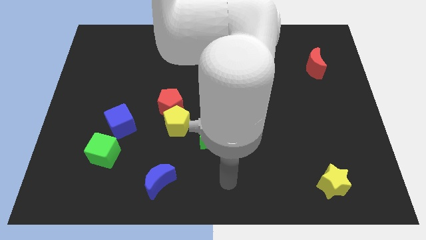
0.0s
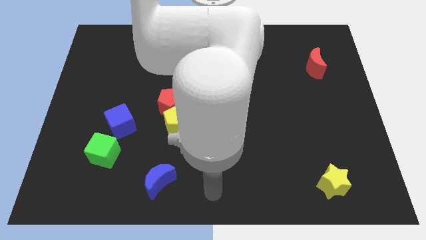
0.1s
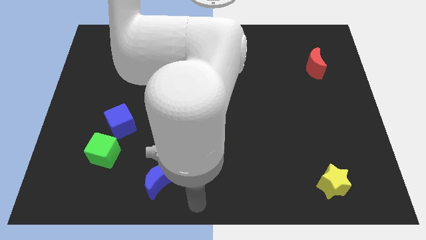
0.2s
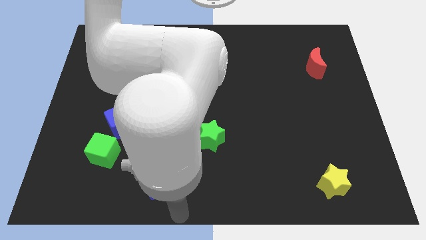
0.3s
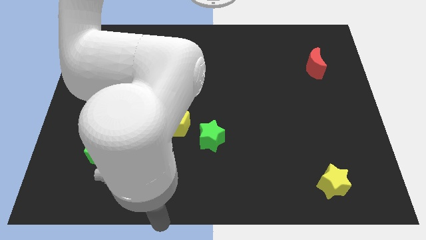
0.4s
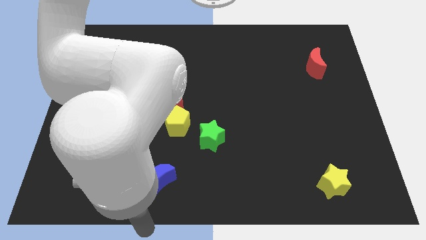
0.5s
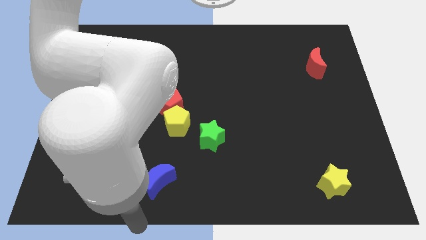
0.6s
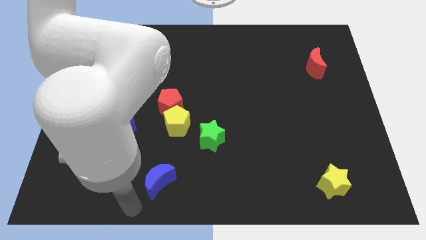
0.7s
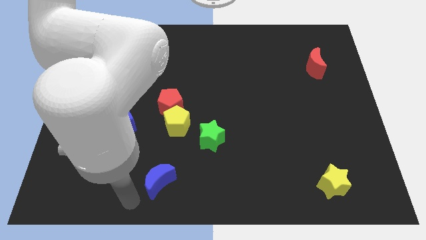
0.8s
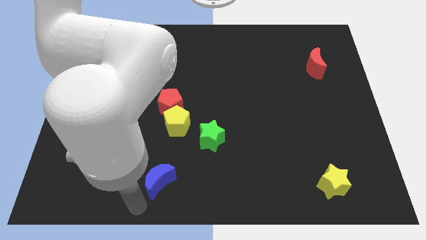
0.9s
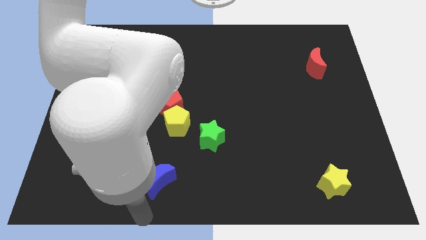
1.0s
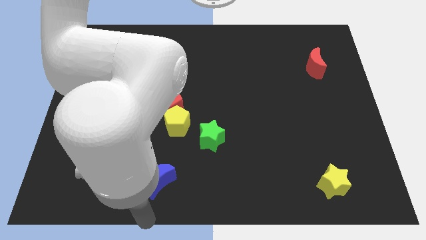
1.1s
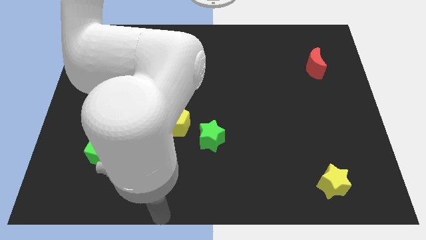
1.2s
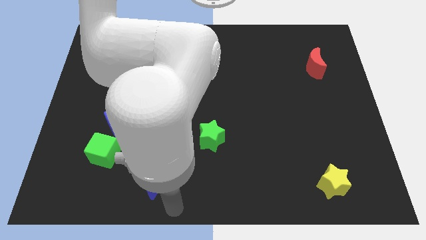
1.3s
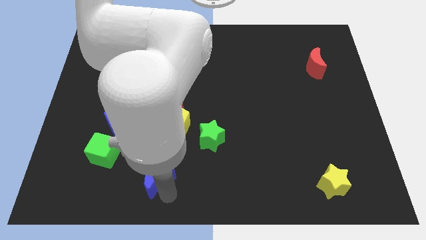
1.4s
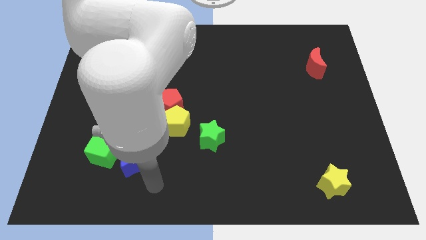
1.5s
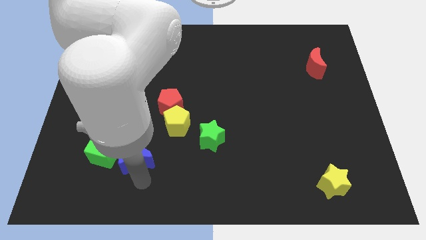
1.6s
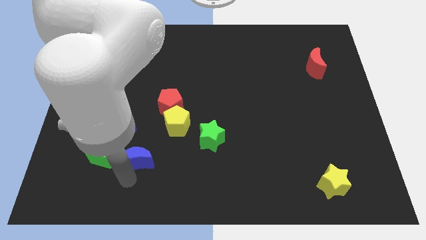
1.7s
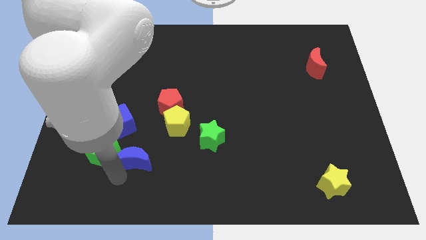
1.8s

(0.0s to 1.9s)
push the blue crescent into the green cube

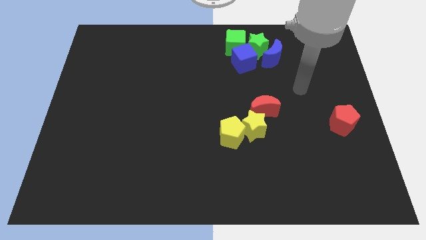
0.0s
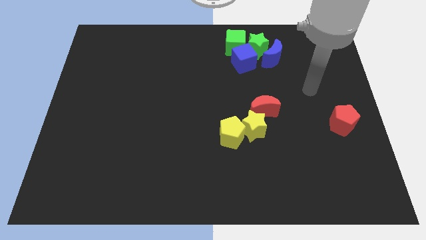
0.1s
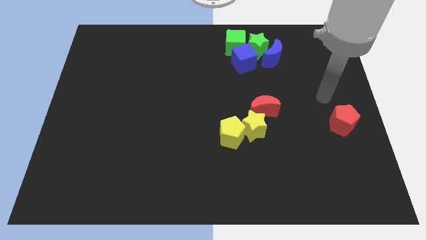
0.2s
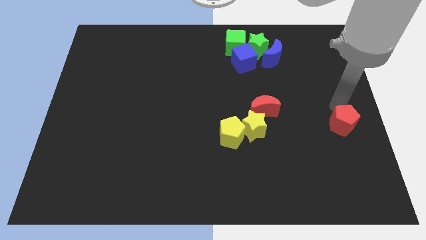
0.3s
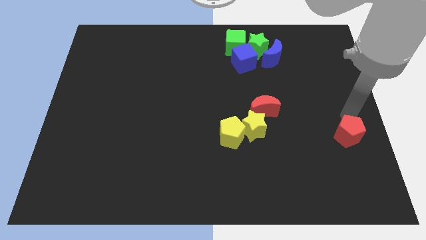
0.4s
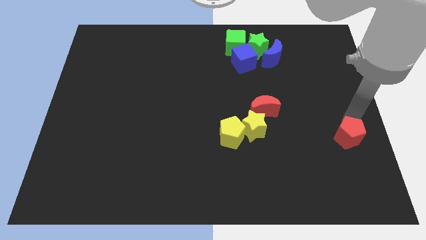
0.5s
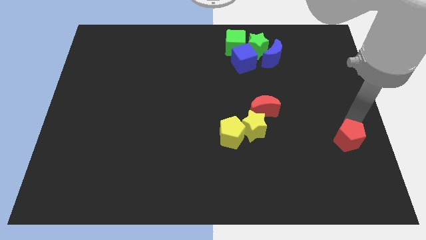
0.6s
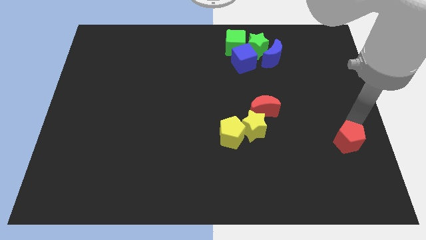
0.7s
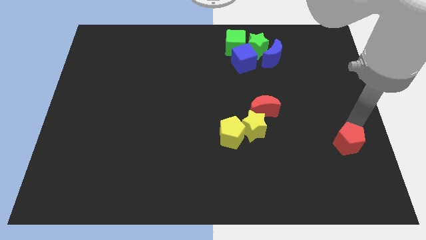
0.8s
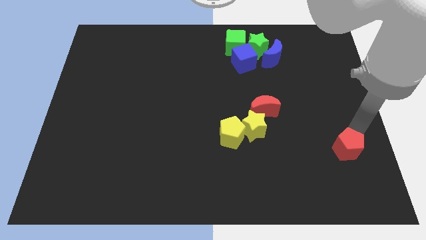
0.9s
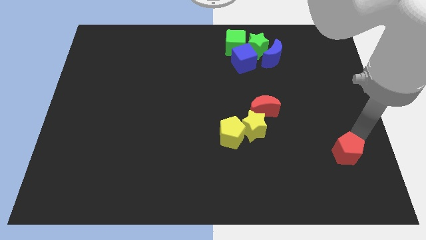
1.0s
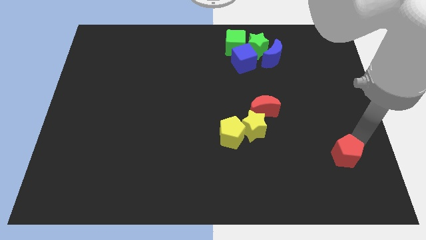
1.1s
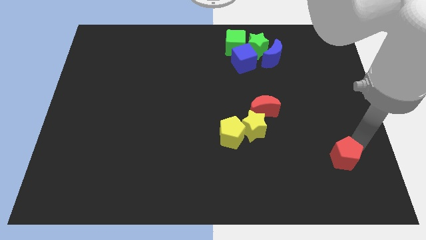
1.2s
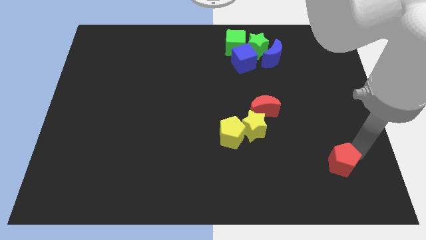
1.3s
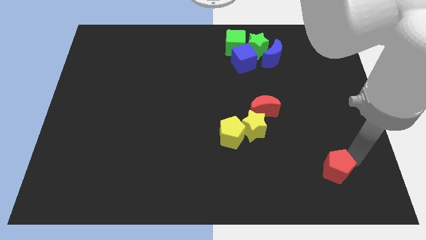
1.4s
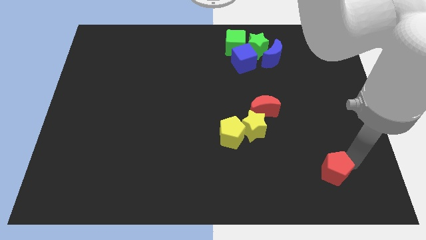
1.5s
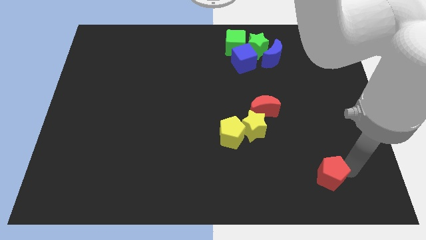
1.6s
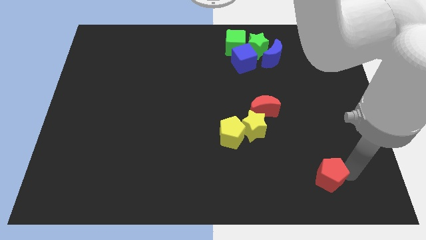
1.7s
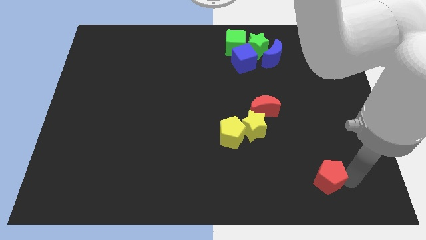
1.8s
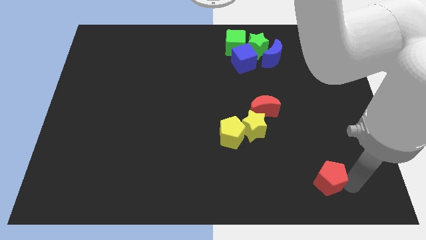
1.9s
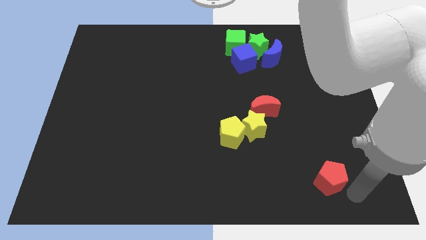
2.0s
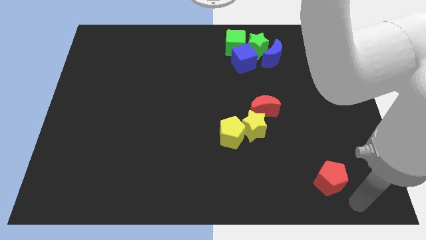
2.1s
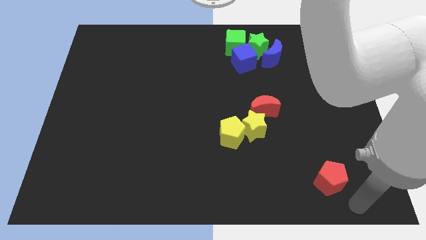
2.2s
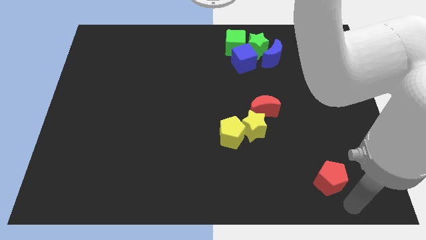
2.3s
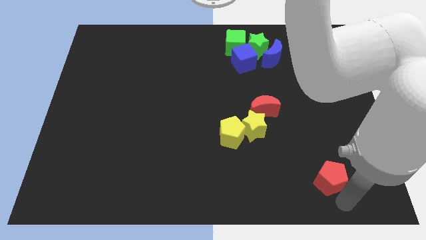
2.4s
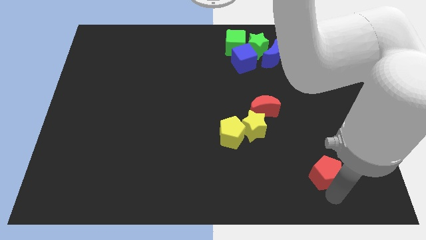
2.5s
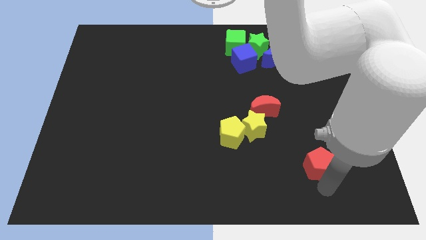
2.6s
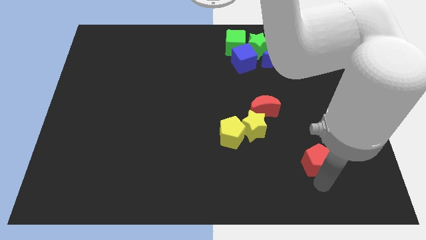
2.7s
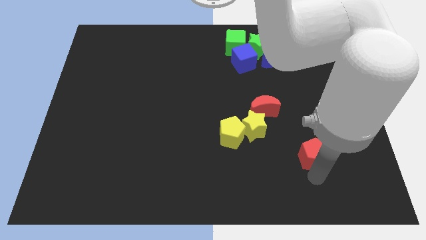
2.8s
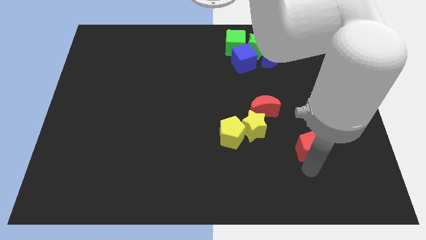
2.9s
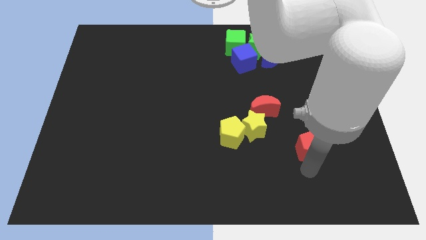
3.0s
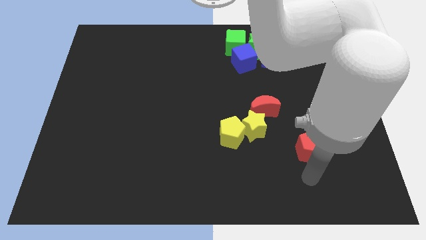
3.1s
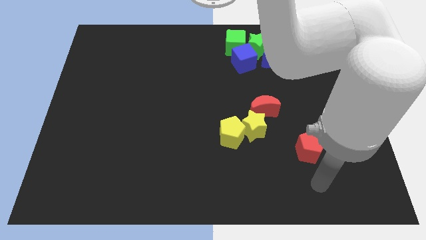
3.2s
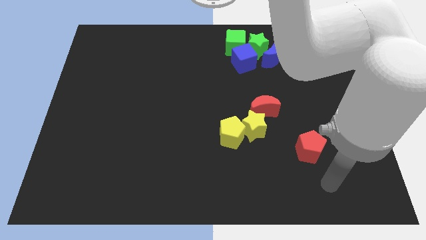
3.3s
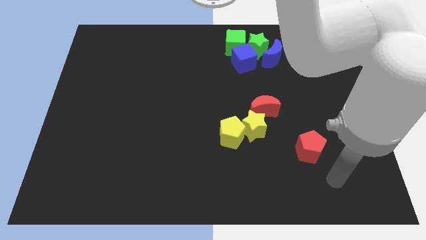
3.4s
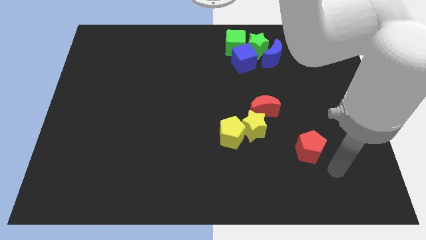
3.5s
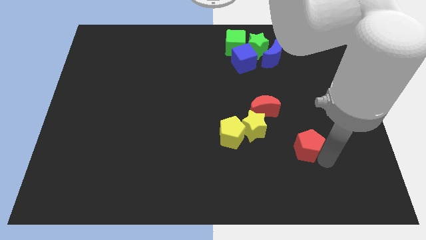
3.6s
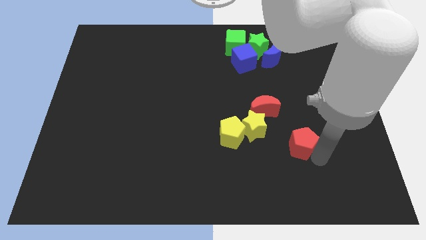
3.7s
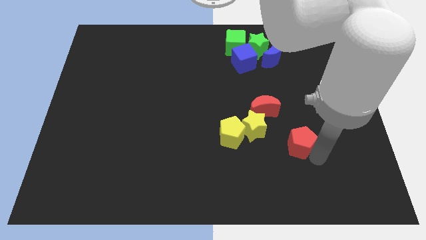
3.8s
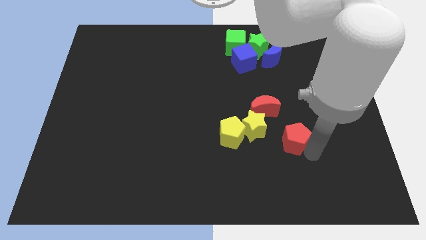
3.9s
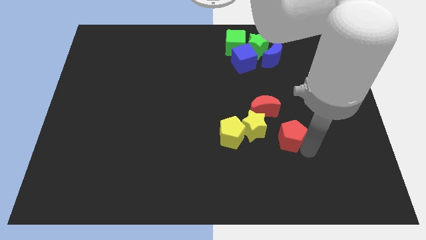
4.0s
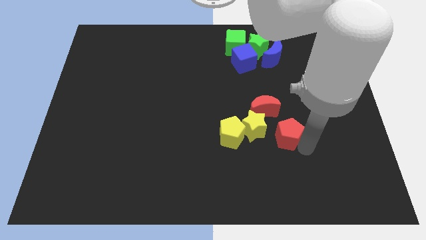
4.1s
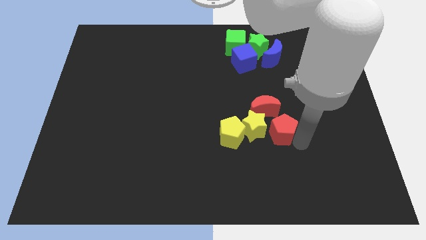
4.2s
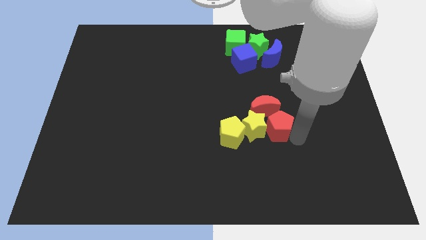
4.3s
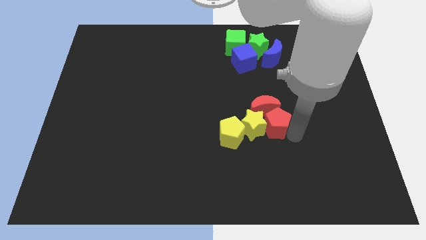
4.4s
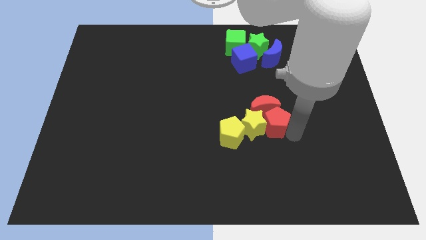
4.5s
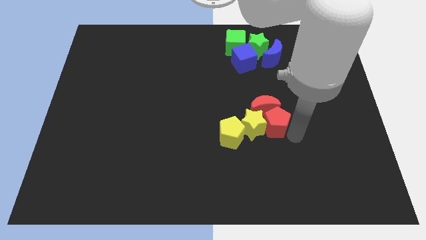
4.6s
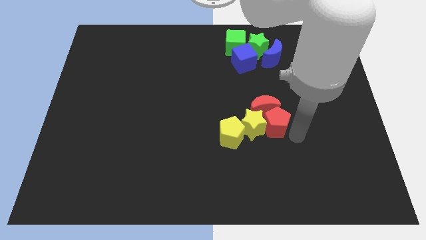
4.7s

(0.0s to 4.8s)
move the red pentagon to the group of both yellow blocks and red crescent

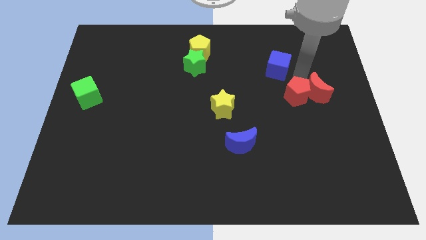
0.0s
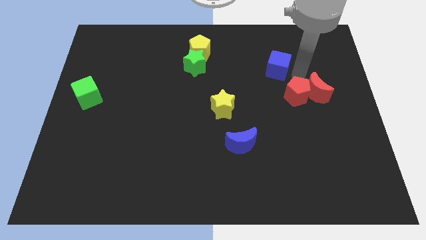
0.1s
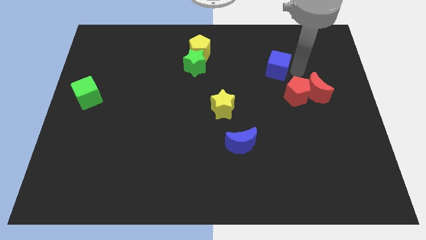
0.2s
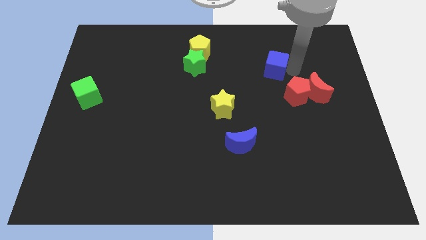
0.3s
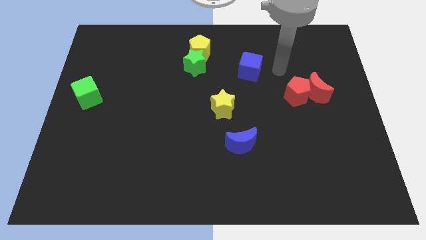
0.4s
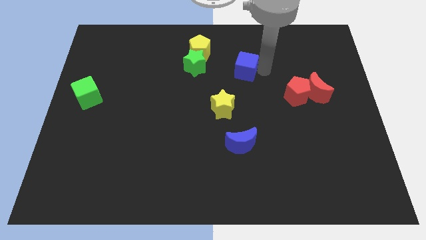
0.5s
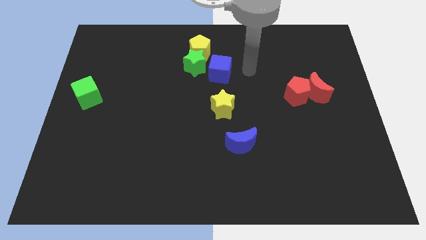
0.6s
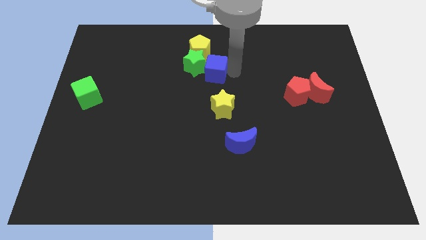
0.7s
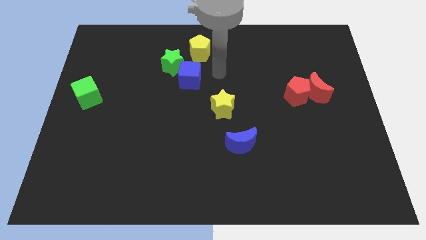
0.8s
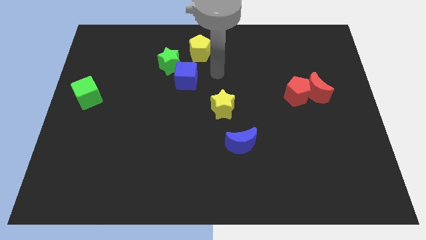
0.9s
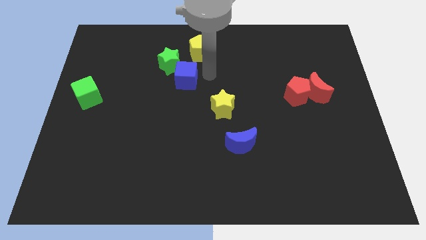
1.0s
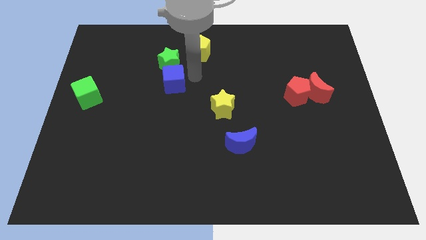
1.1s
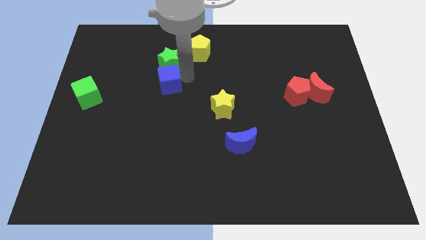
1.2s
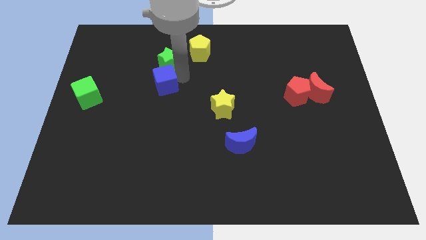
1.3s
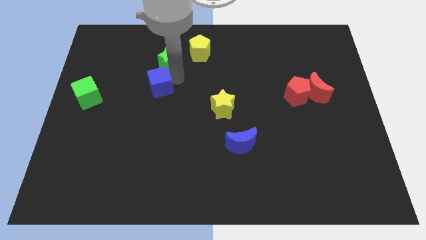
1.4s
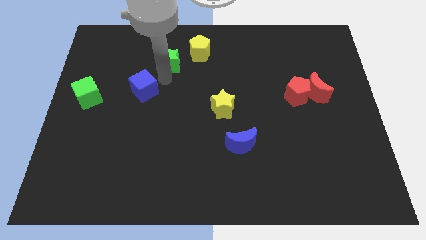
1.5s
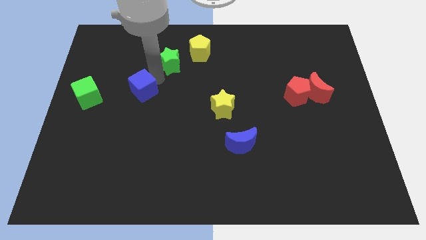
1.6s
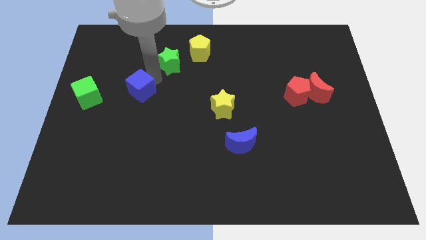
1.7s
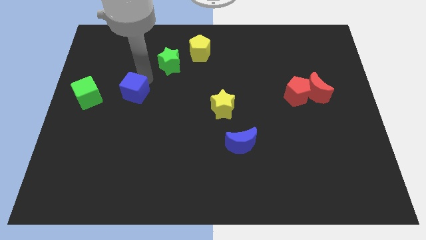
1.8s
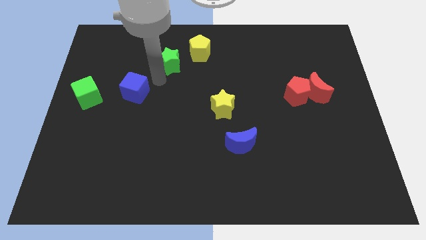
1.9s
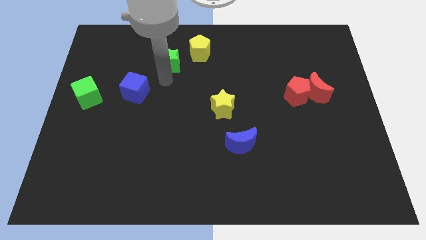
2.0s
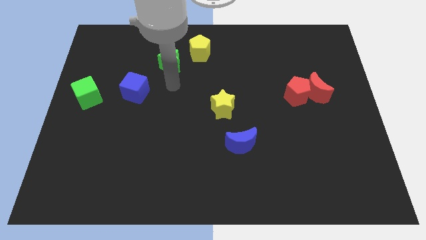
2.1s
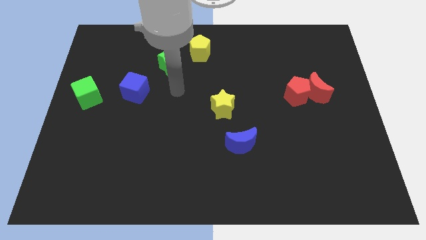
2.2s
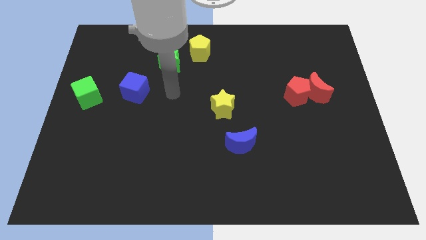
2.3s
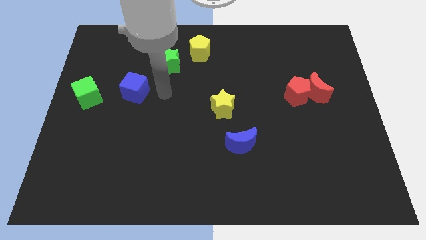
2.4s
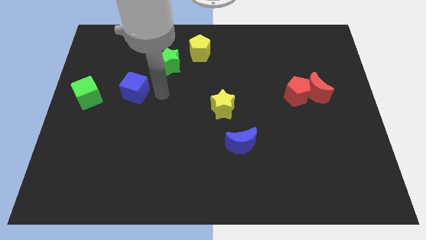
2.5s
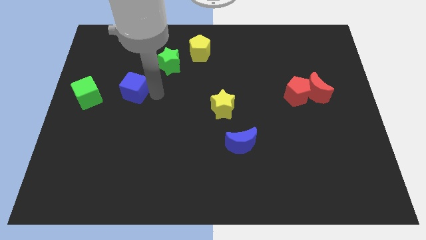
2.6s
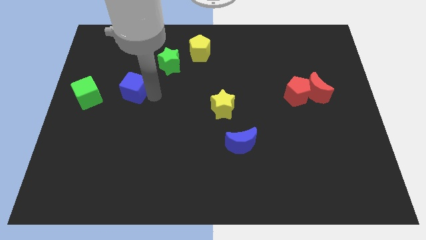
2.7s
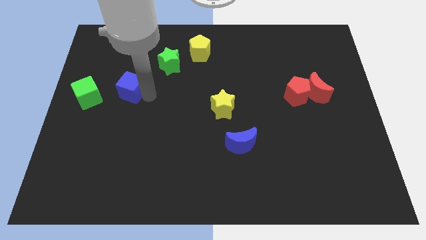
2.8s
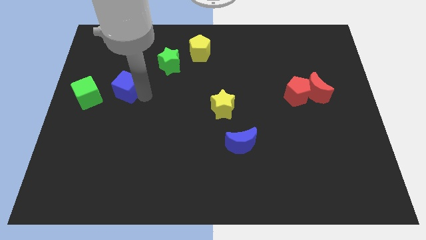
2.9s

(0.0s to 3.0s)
place blue cube parallel to green cube
